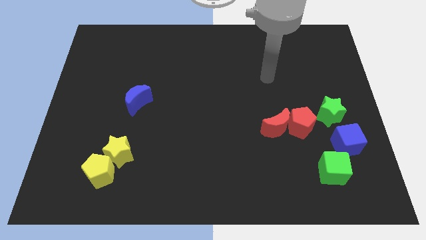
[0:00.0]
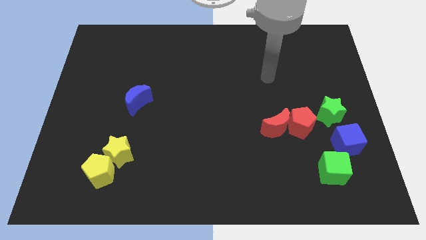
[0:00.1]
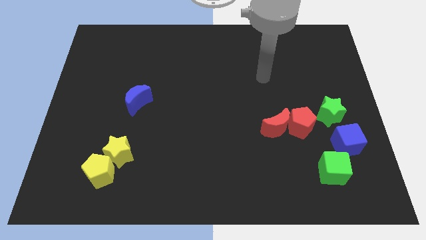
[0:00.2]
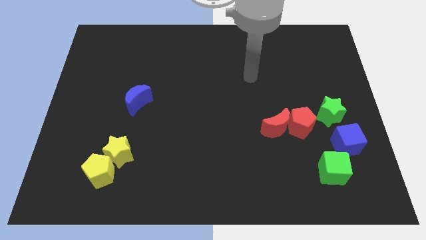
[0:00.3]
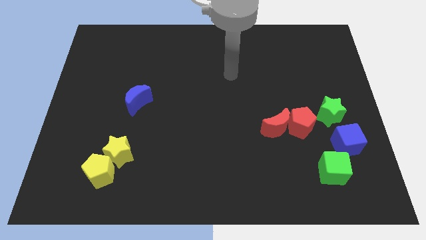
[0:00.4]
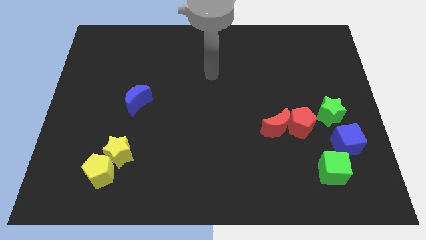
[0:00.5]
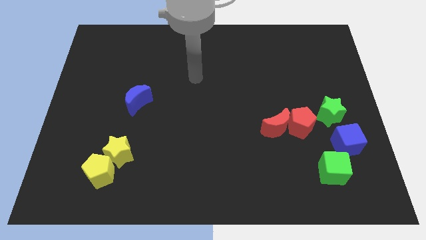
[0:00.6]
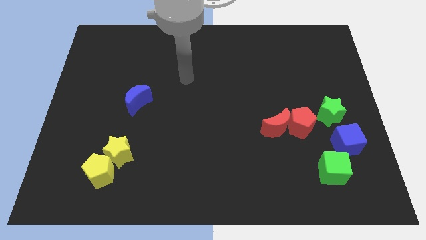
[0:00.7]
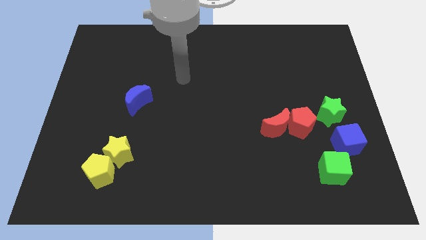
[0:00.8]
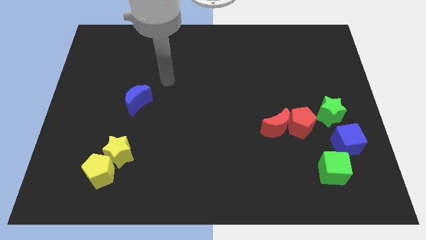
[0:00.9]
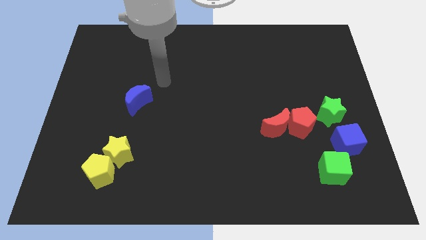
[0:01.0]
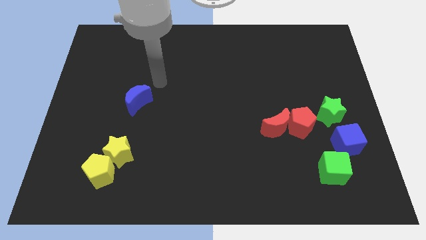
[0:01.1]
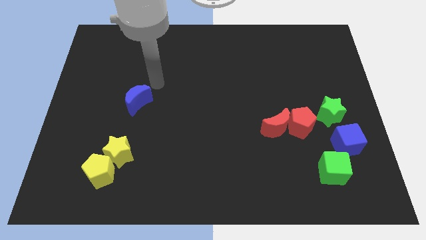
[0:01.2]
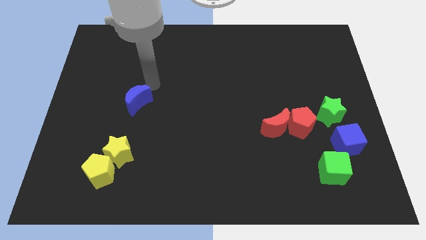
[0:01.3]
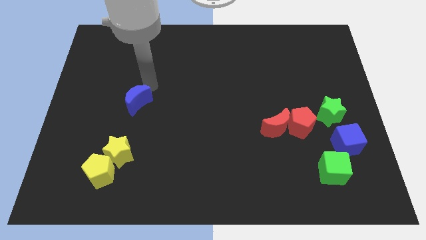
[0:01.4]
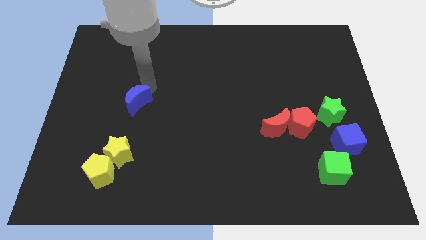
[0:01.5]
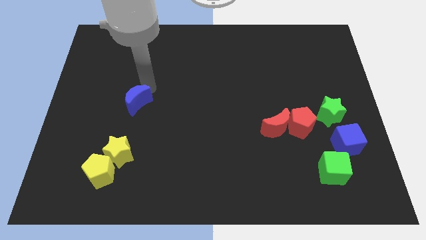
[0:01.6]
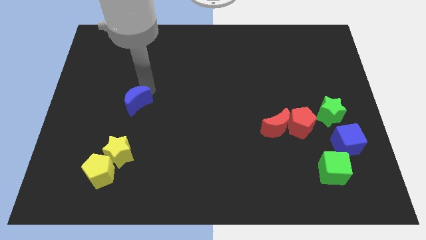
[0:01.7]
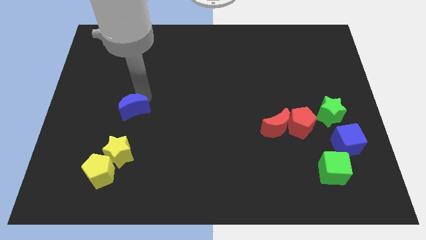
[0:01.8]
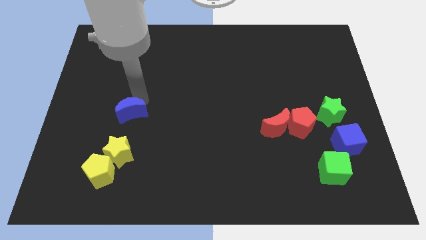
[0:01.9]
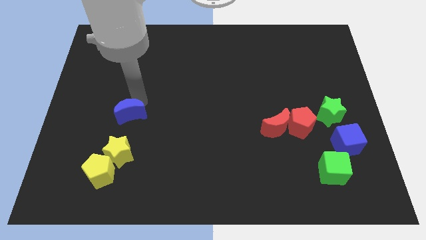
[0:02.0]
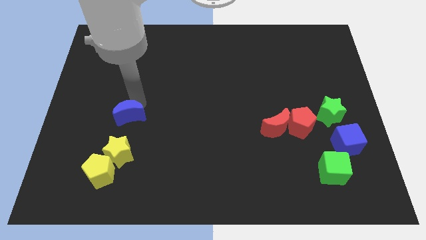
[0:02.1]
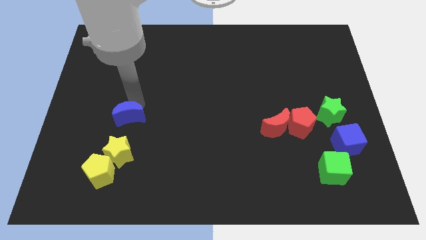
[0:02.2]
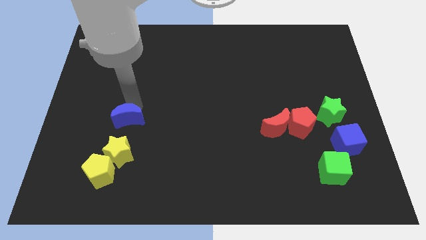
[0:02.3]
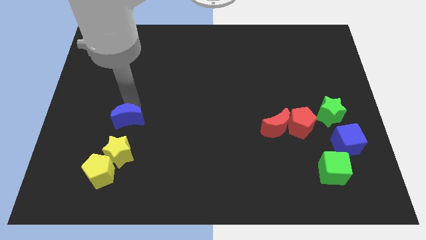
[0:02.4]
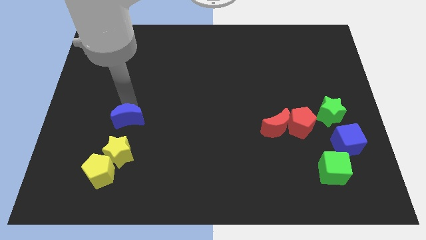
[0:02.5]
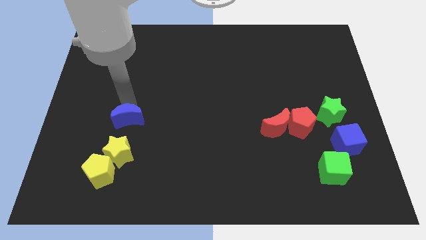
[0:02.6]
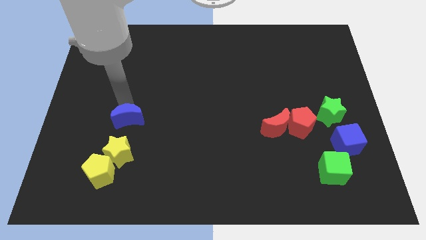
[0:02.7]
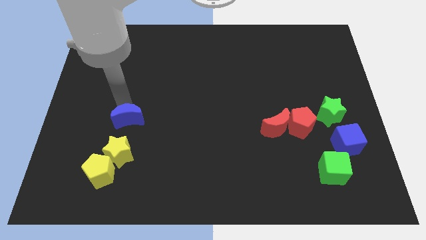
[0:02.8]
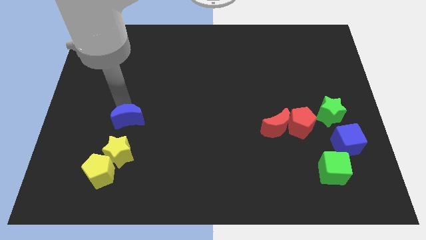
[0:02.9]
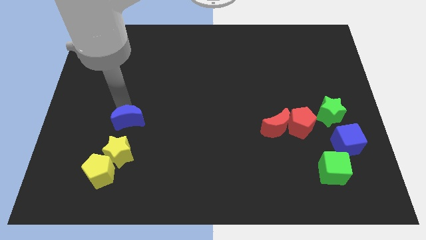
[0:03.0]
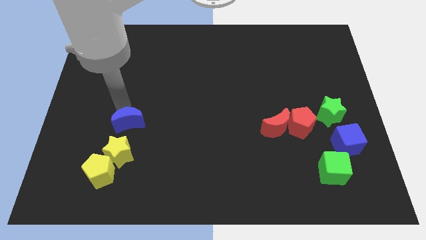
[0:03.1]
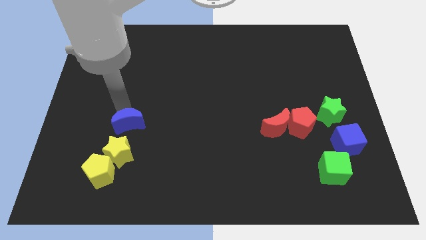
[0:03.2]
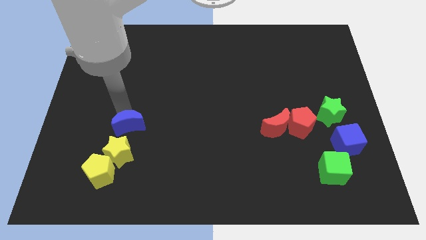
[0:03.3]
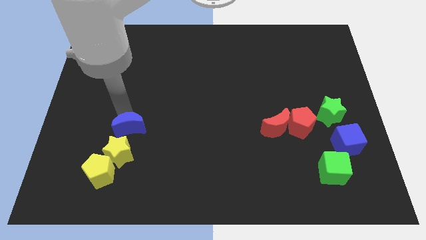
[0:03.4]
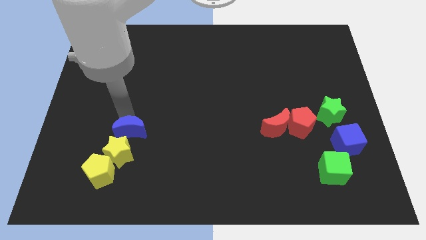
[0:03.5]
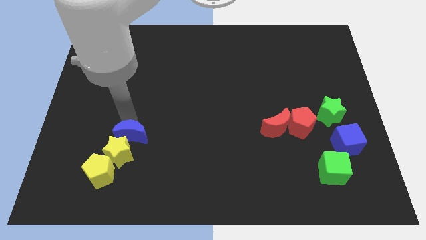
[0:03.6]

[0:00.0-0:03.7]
move the blue moon close to the yellow star

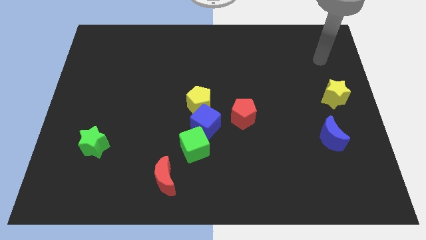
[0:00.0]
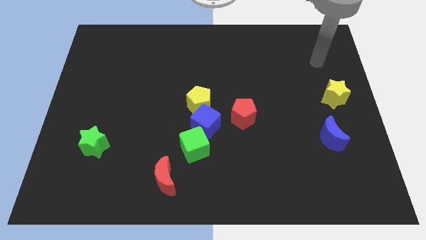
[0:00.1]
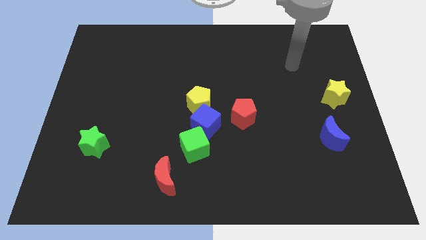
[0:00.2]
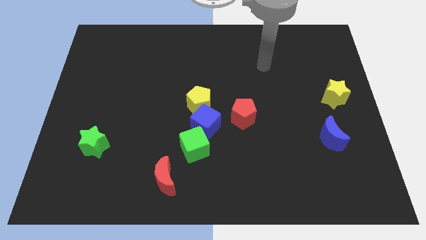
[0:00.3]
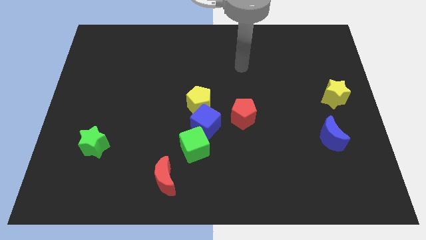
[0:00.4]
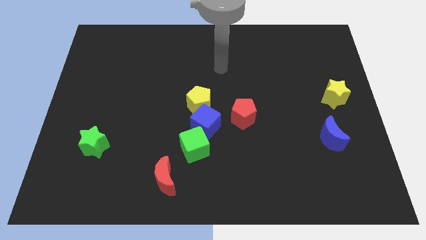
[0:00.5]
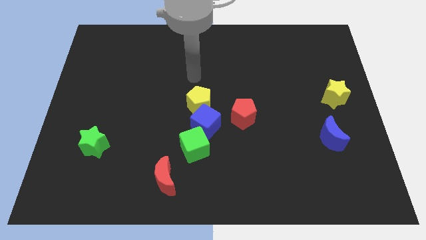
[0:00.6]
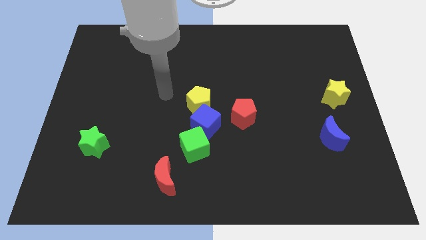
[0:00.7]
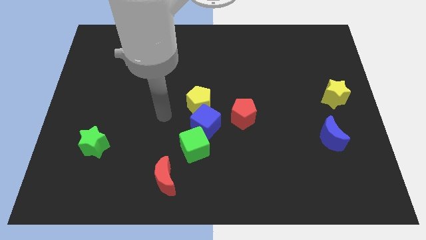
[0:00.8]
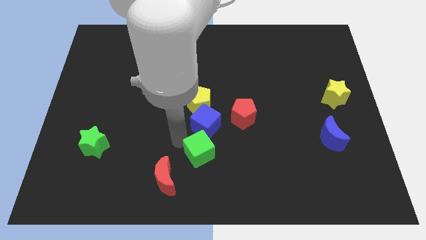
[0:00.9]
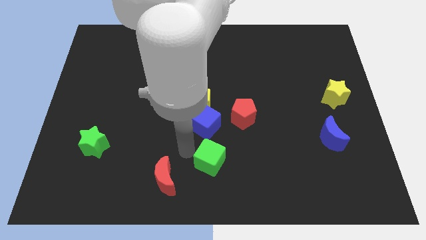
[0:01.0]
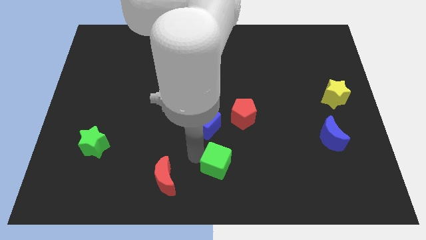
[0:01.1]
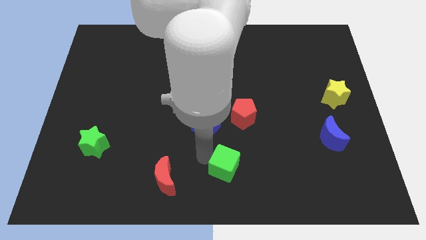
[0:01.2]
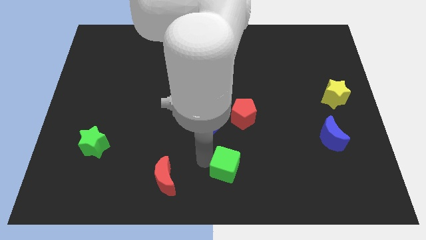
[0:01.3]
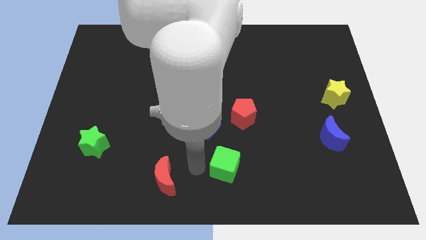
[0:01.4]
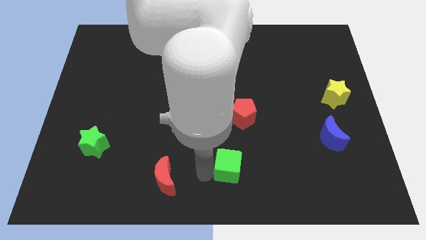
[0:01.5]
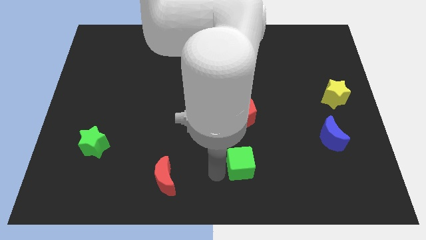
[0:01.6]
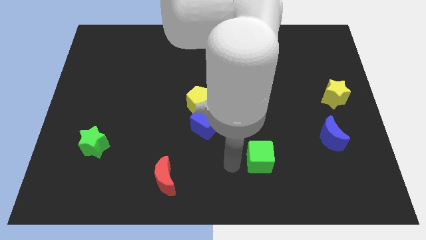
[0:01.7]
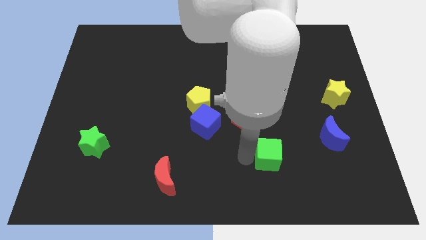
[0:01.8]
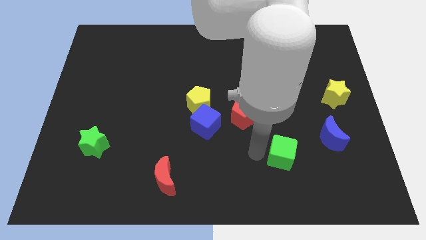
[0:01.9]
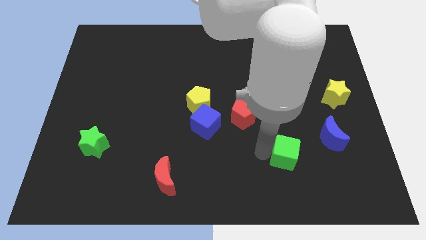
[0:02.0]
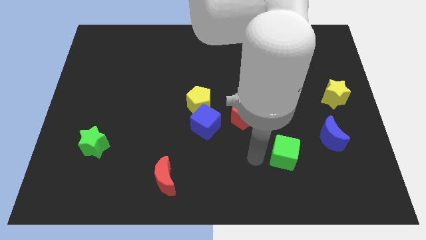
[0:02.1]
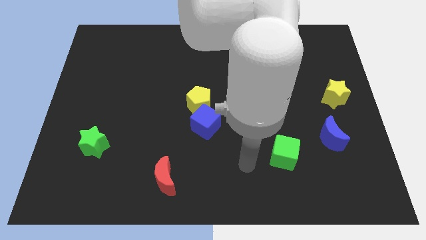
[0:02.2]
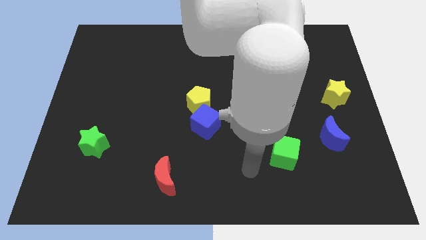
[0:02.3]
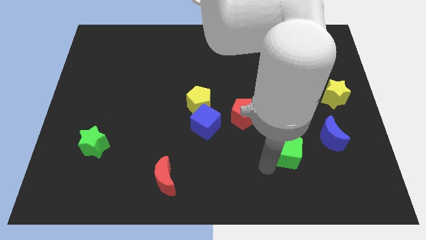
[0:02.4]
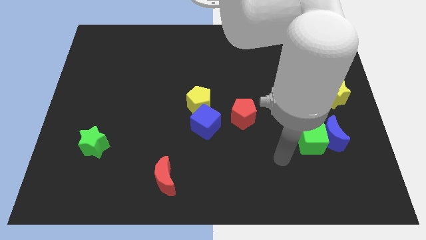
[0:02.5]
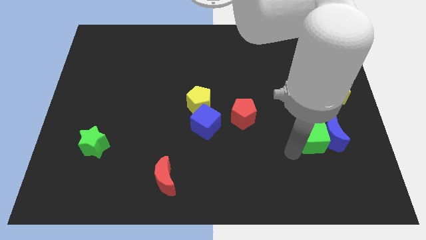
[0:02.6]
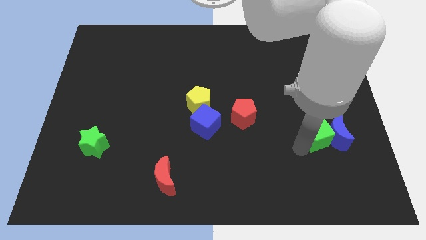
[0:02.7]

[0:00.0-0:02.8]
slide the green cube to the blue moon

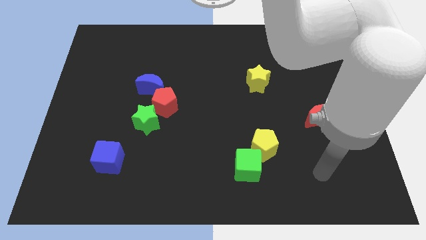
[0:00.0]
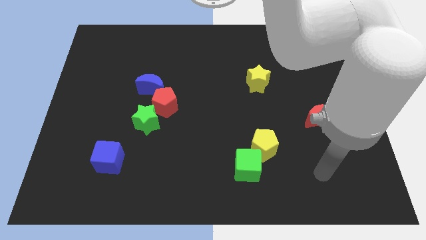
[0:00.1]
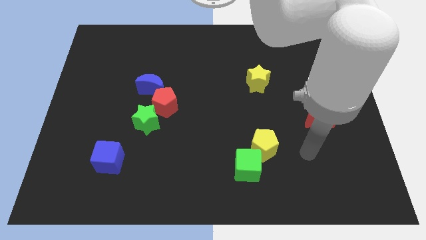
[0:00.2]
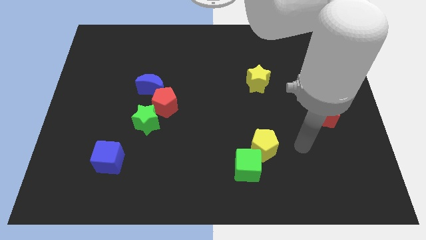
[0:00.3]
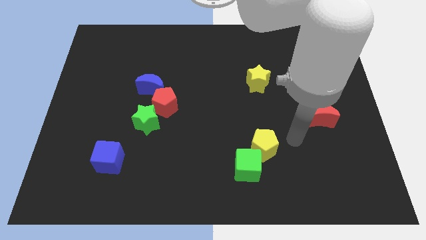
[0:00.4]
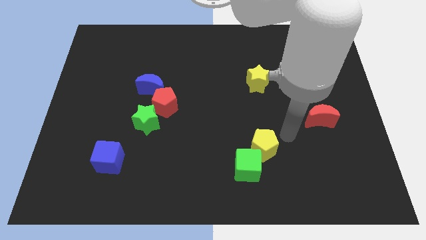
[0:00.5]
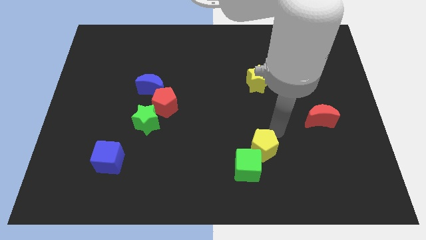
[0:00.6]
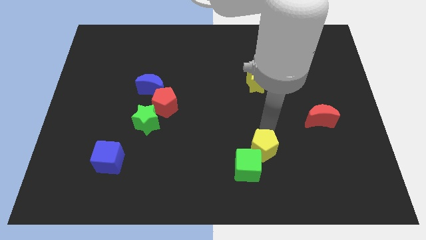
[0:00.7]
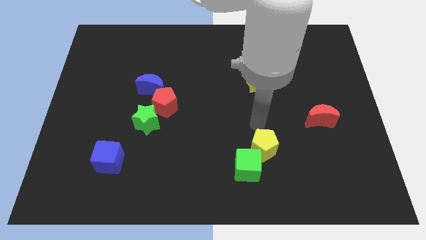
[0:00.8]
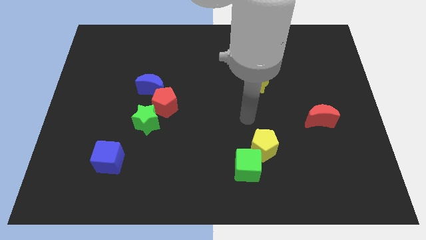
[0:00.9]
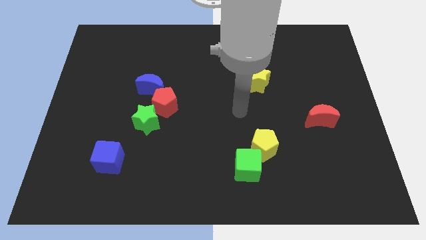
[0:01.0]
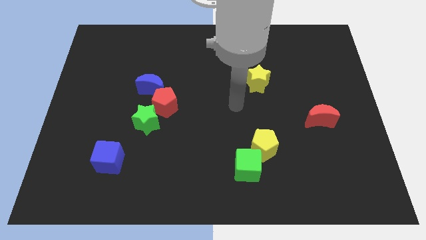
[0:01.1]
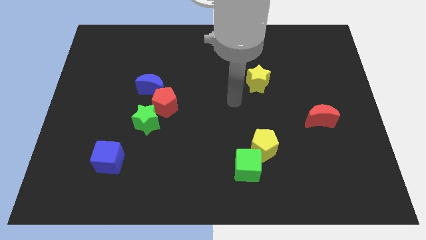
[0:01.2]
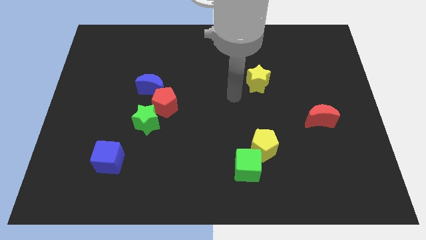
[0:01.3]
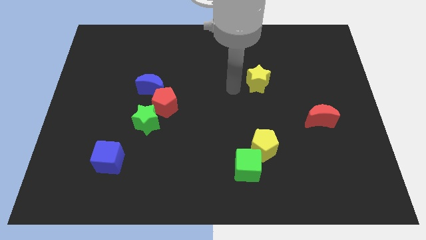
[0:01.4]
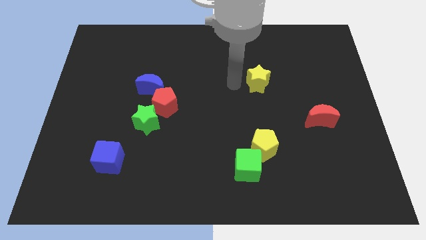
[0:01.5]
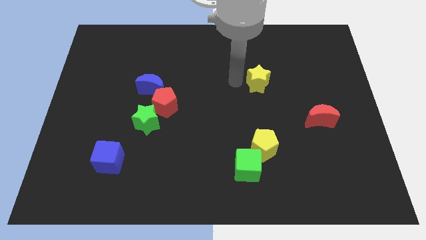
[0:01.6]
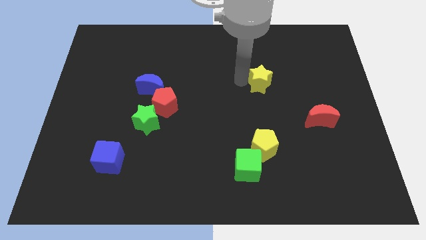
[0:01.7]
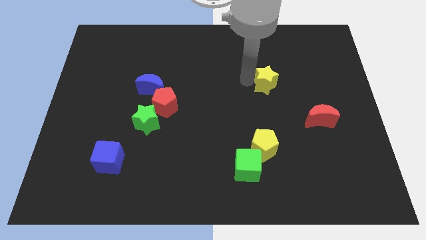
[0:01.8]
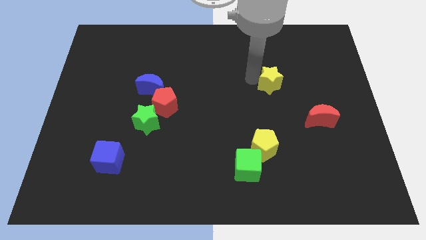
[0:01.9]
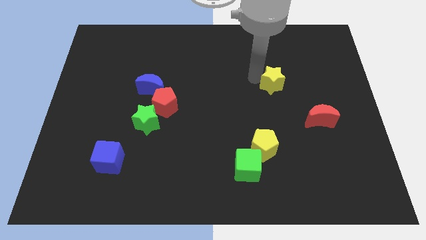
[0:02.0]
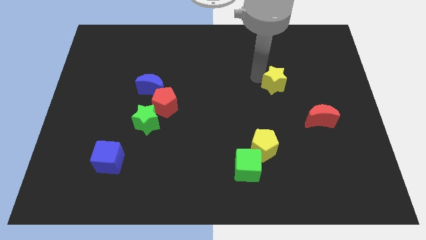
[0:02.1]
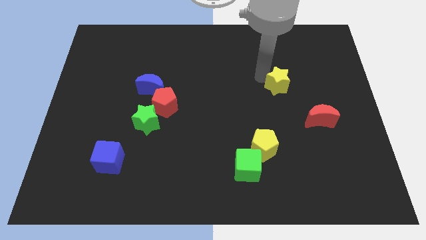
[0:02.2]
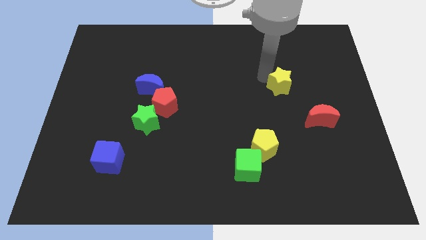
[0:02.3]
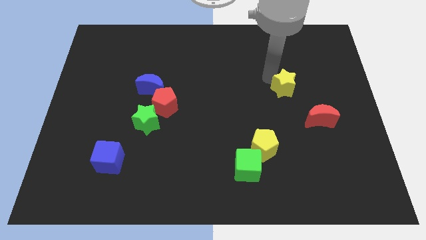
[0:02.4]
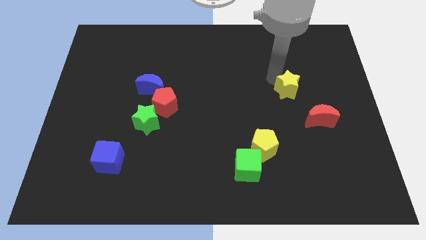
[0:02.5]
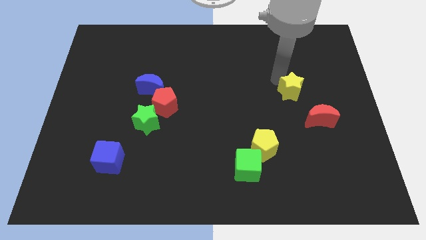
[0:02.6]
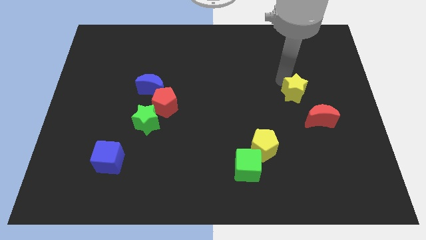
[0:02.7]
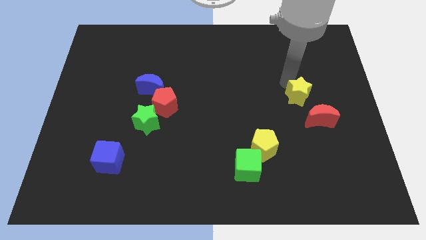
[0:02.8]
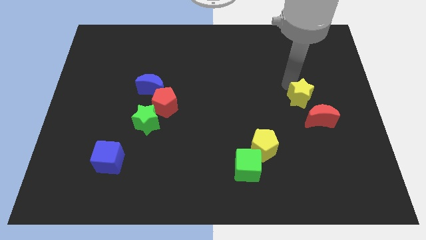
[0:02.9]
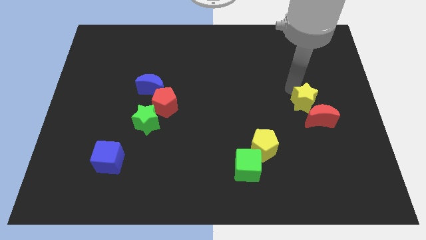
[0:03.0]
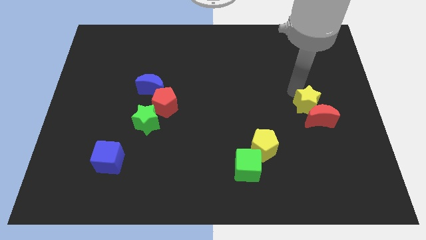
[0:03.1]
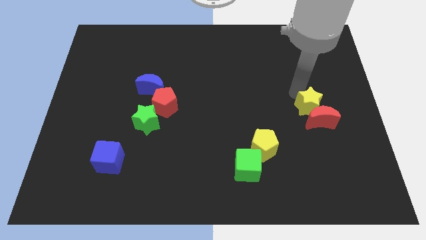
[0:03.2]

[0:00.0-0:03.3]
push the yellow star to the red moon
